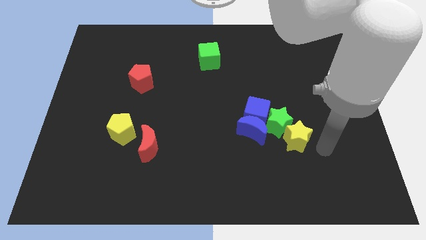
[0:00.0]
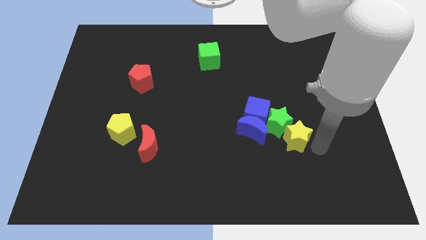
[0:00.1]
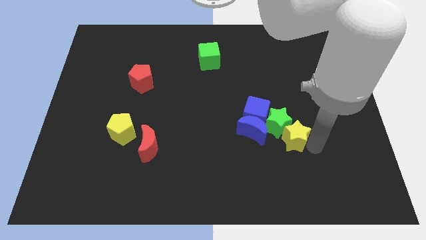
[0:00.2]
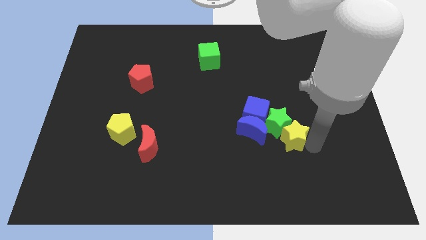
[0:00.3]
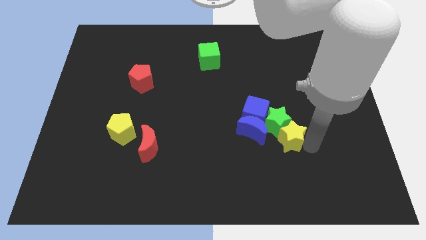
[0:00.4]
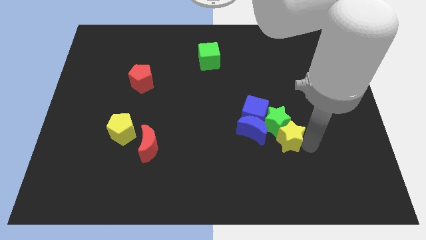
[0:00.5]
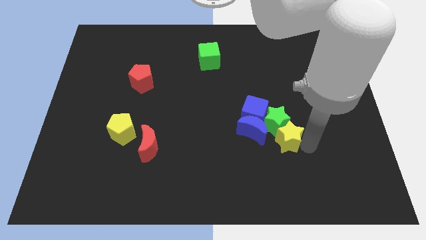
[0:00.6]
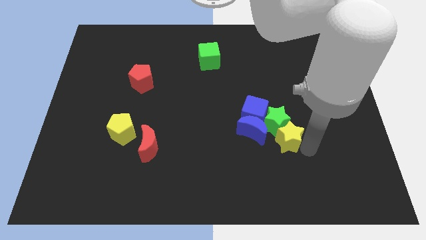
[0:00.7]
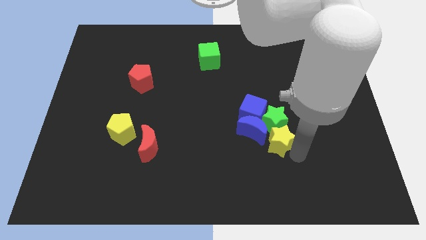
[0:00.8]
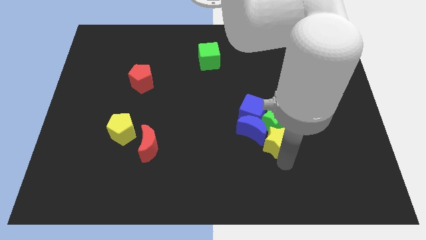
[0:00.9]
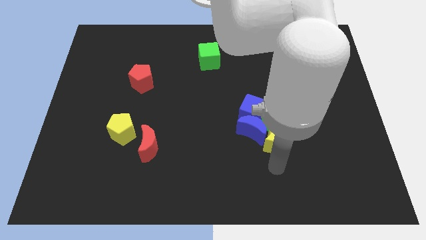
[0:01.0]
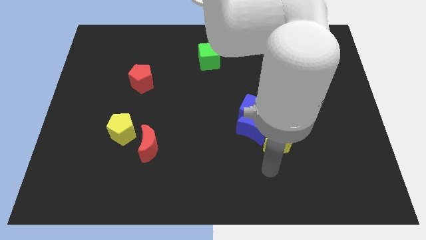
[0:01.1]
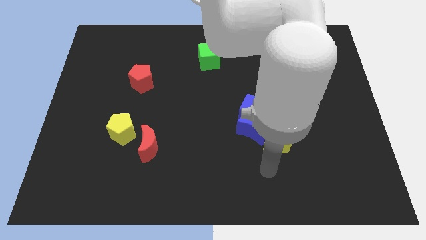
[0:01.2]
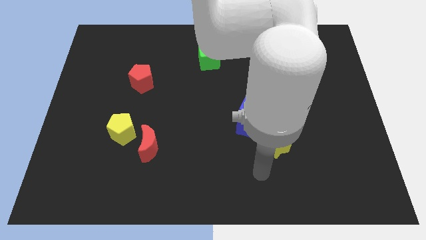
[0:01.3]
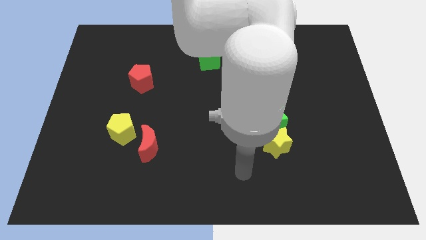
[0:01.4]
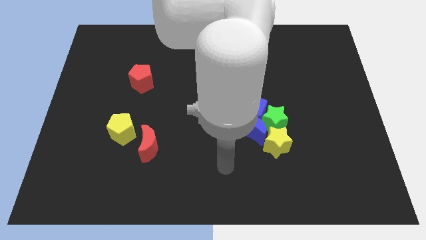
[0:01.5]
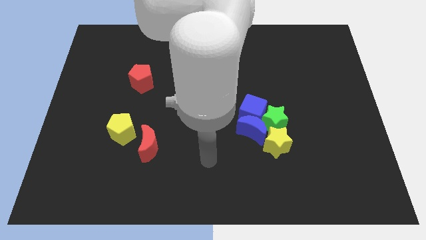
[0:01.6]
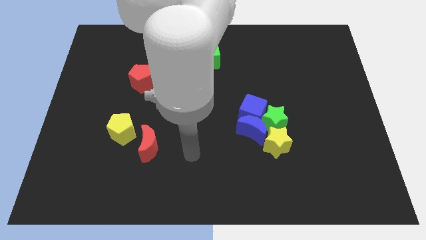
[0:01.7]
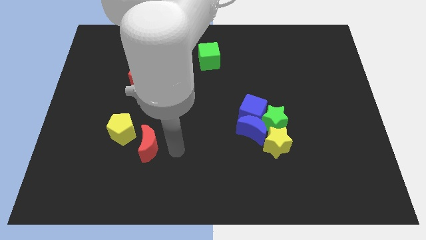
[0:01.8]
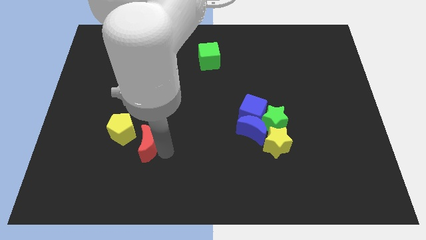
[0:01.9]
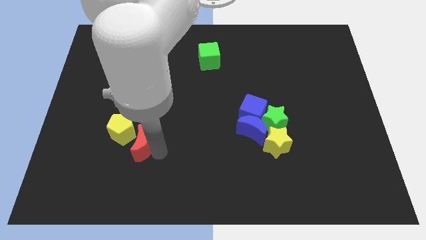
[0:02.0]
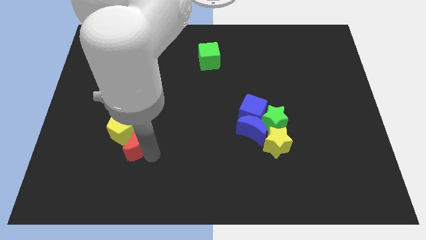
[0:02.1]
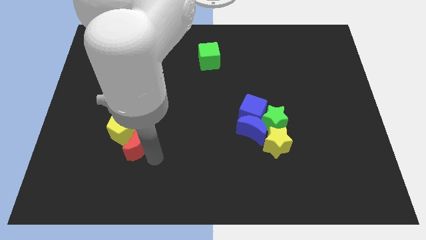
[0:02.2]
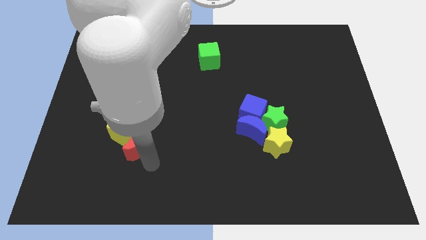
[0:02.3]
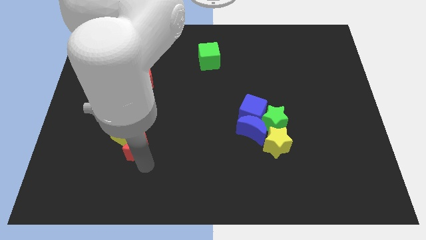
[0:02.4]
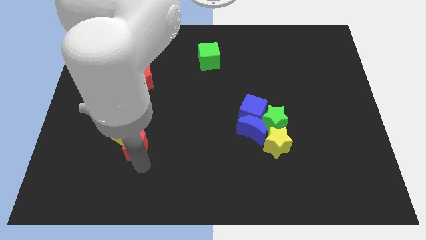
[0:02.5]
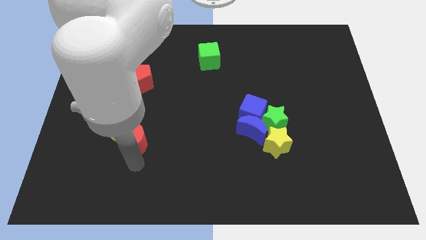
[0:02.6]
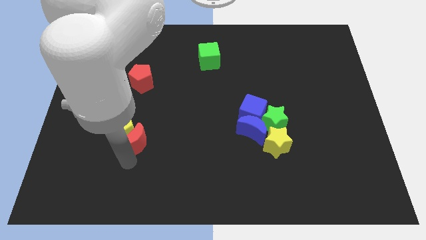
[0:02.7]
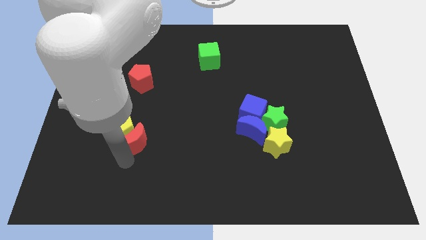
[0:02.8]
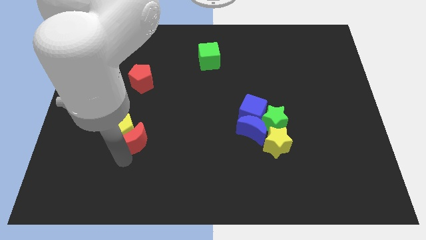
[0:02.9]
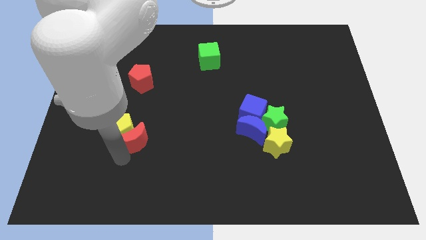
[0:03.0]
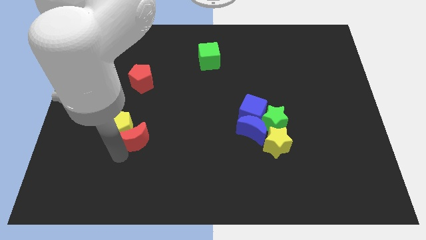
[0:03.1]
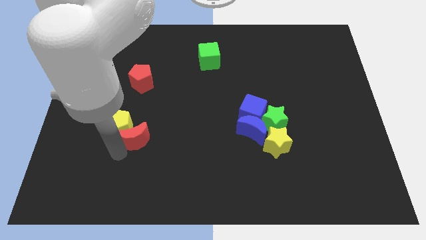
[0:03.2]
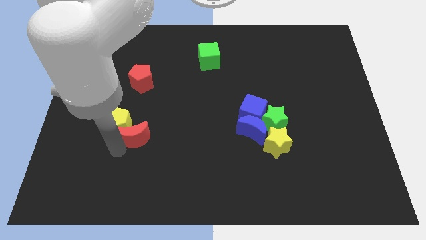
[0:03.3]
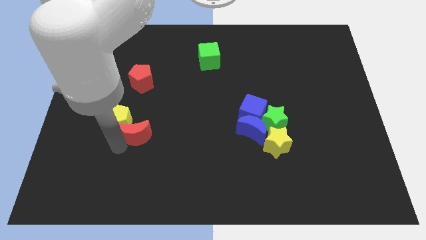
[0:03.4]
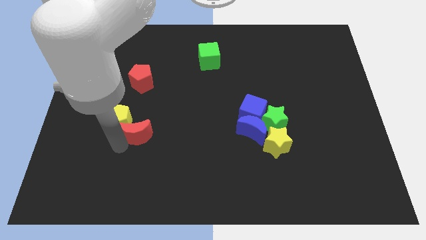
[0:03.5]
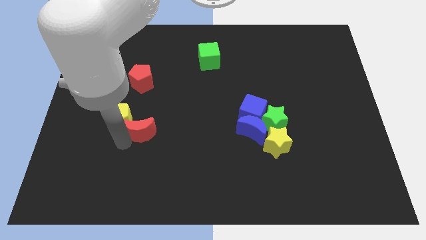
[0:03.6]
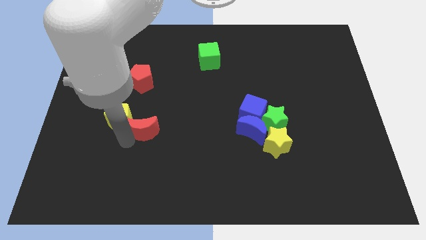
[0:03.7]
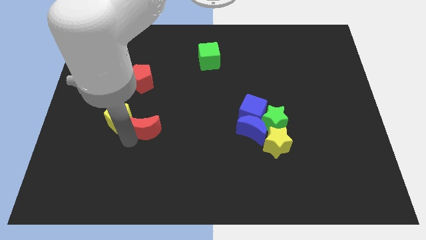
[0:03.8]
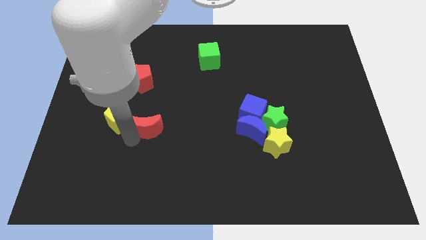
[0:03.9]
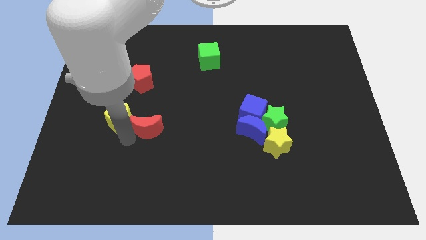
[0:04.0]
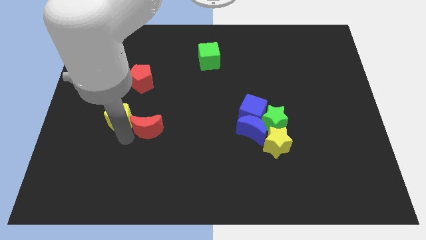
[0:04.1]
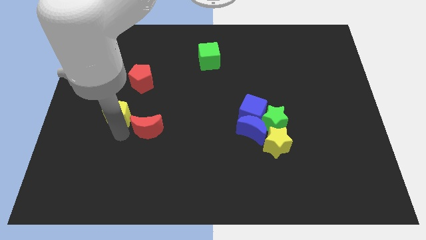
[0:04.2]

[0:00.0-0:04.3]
move the red crescent and yellow pentagon slightly up

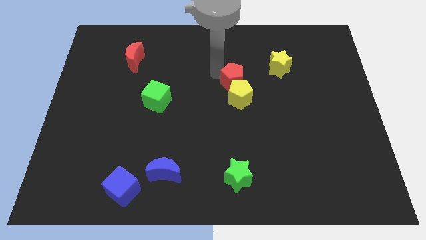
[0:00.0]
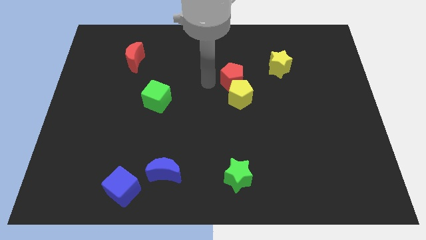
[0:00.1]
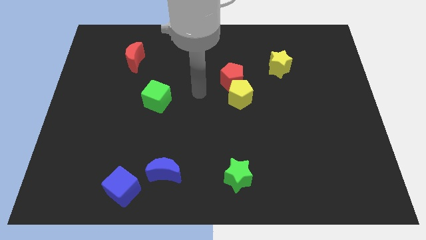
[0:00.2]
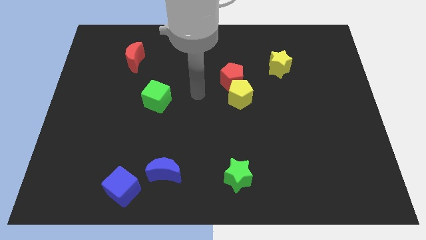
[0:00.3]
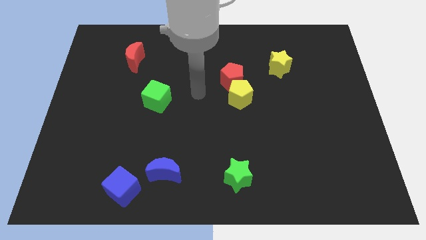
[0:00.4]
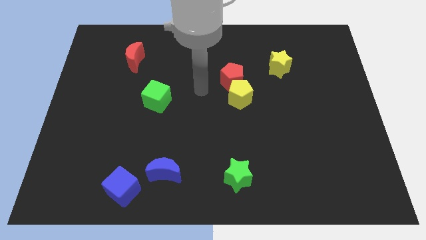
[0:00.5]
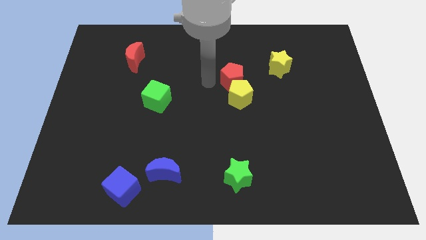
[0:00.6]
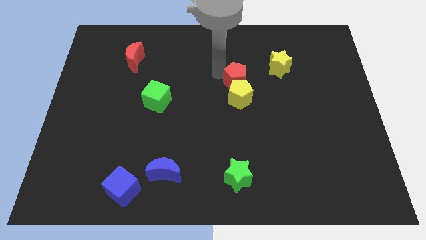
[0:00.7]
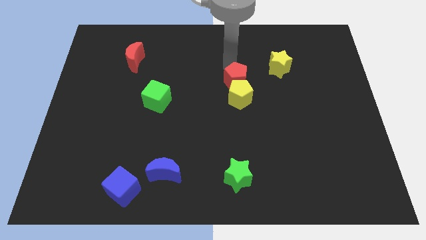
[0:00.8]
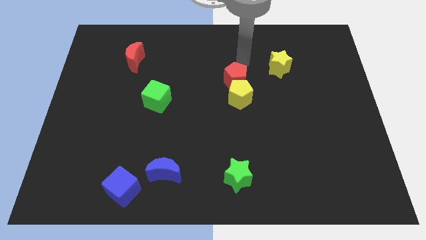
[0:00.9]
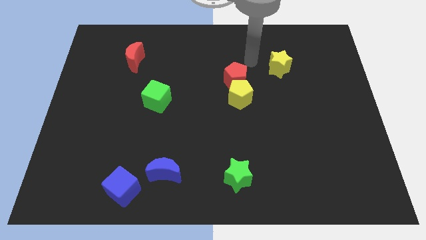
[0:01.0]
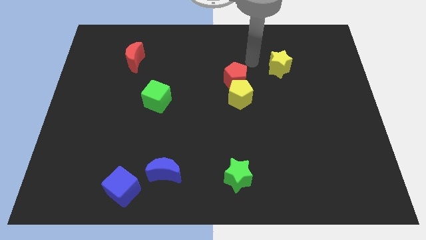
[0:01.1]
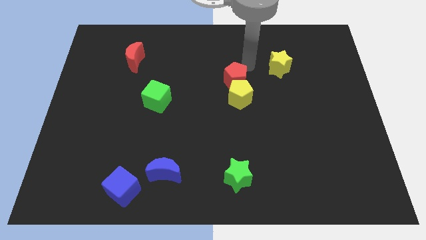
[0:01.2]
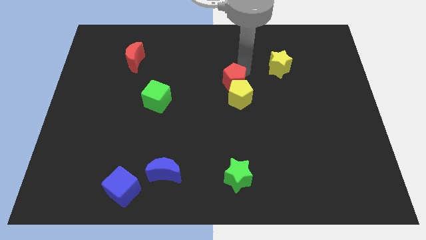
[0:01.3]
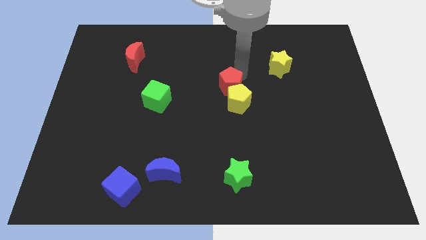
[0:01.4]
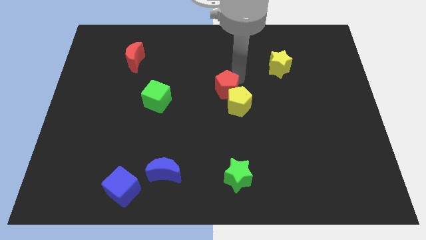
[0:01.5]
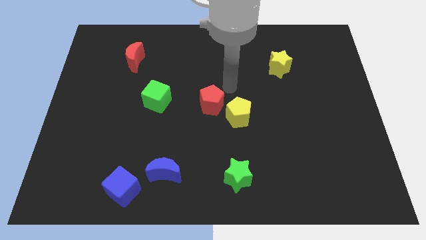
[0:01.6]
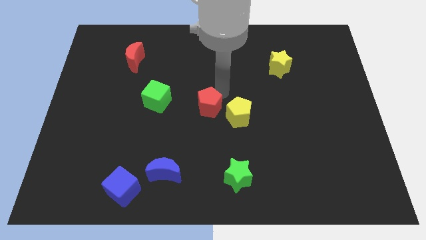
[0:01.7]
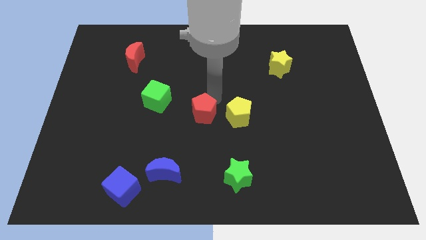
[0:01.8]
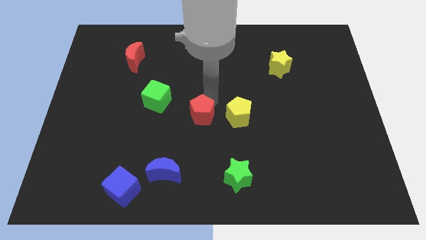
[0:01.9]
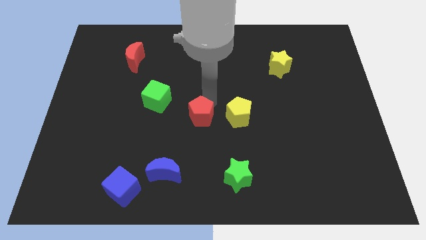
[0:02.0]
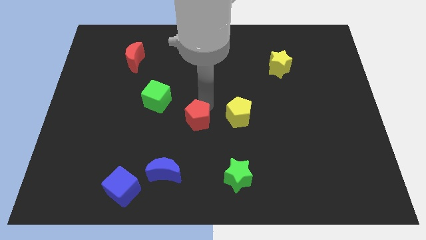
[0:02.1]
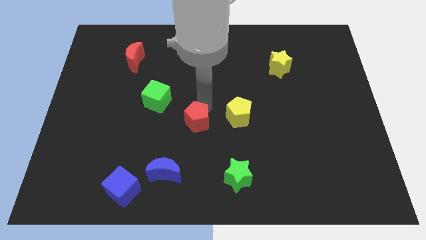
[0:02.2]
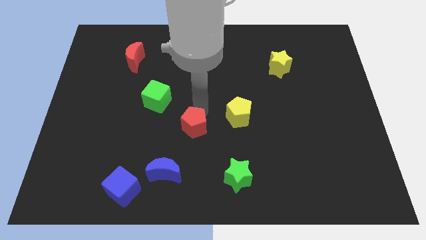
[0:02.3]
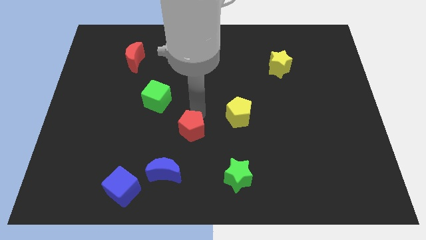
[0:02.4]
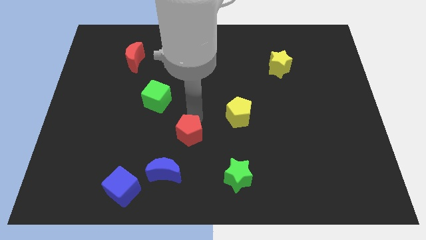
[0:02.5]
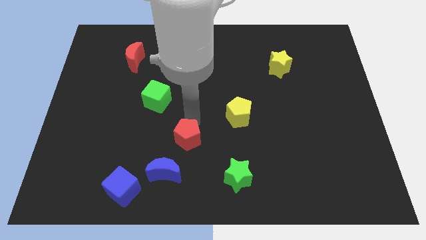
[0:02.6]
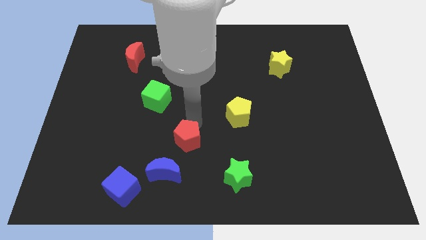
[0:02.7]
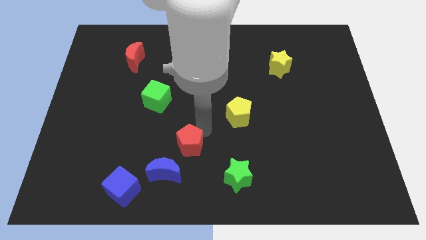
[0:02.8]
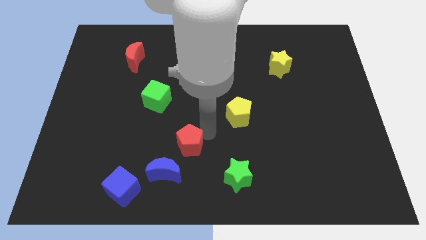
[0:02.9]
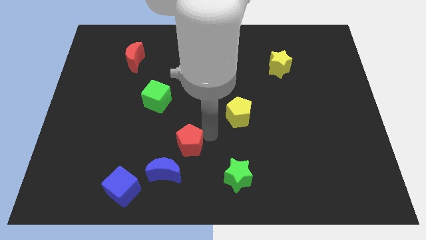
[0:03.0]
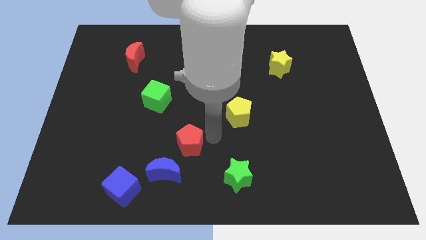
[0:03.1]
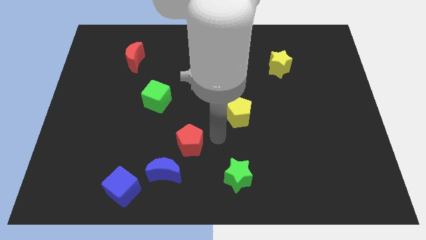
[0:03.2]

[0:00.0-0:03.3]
push the red pentagon towards the blue crescent

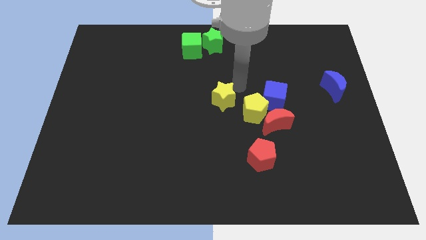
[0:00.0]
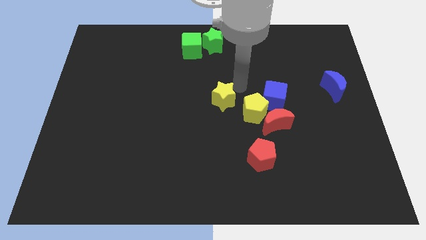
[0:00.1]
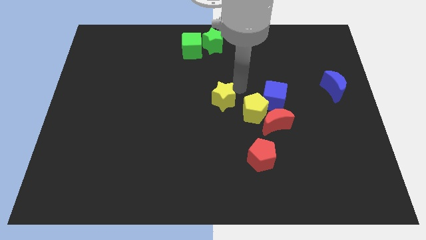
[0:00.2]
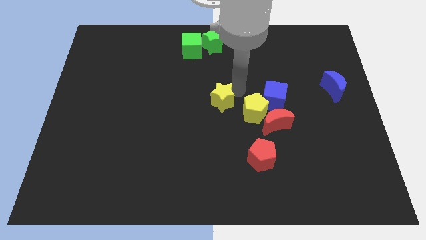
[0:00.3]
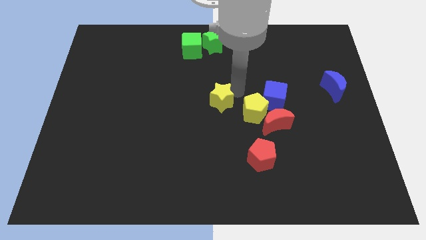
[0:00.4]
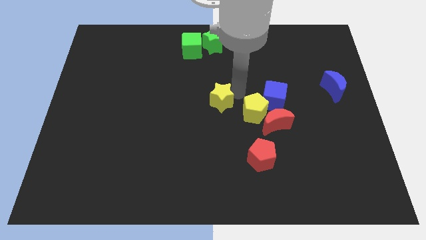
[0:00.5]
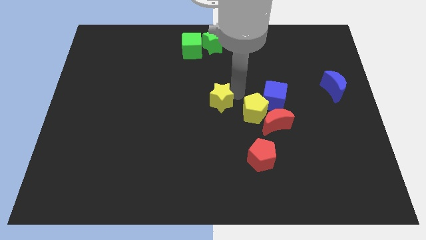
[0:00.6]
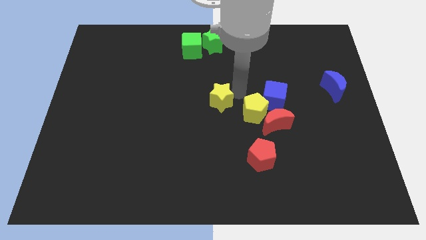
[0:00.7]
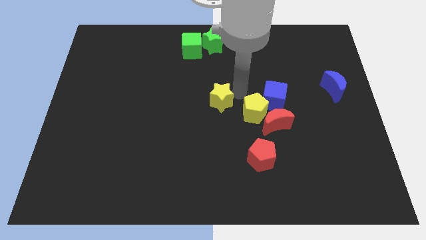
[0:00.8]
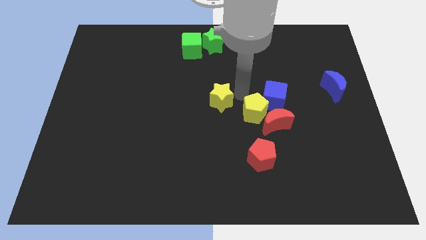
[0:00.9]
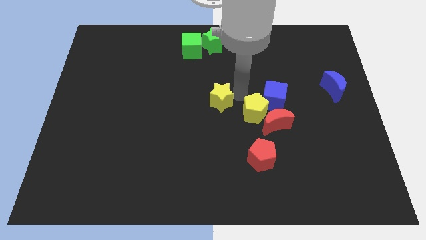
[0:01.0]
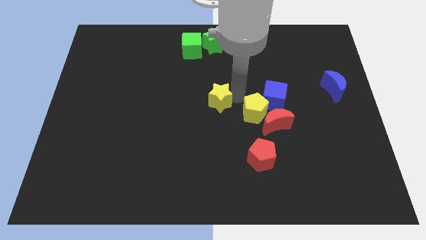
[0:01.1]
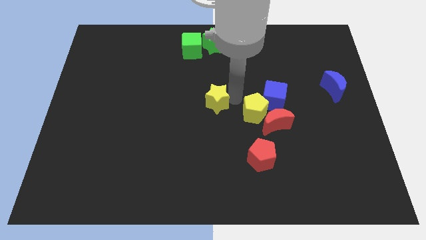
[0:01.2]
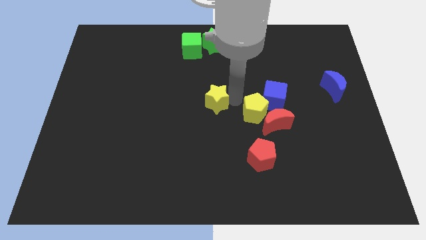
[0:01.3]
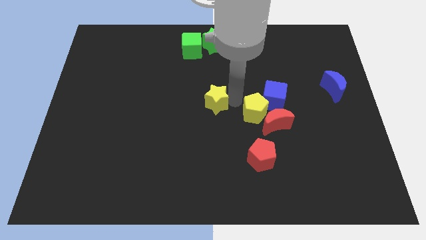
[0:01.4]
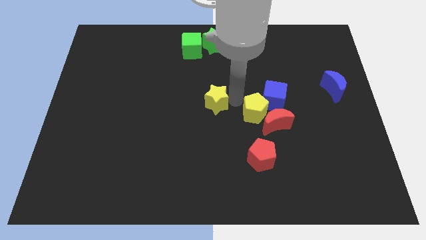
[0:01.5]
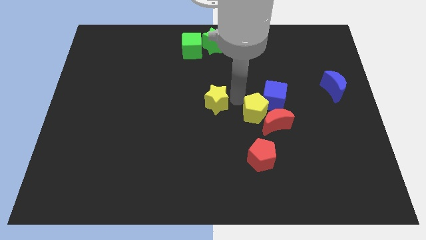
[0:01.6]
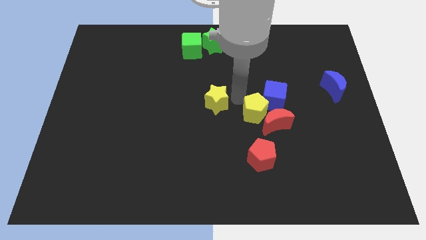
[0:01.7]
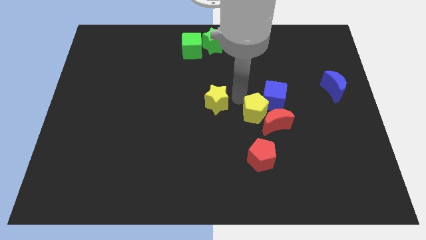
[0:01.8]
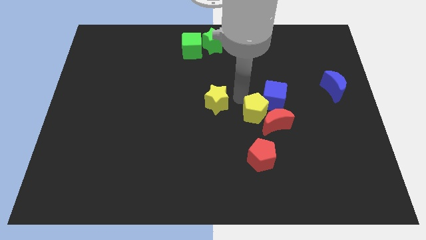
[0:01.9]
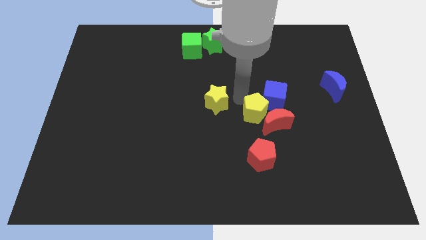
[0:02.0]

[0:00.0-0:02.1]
place yellow star at the center
